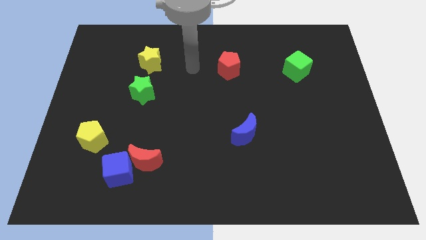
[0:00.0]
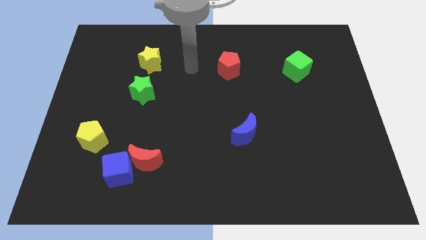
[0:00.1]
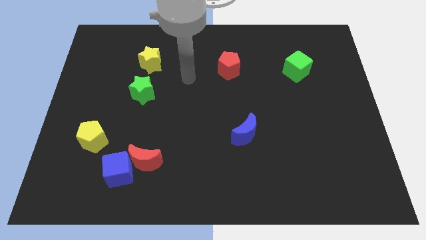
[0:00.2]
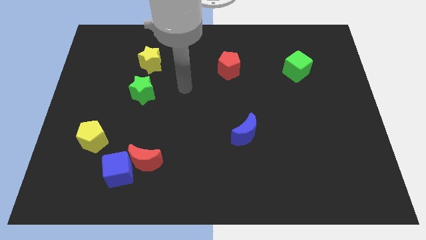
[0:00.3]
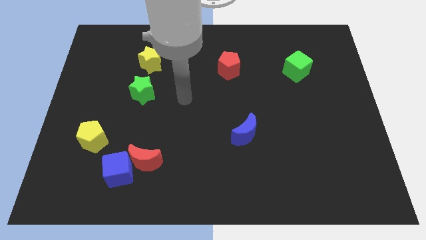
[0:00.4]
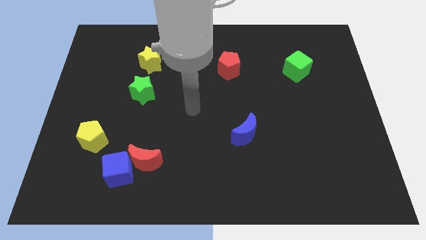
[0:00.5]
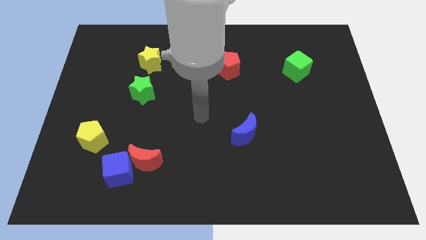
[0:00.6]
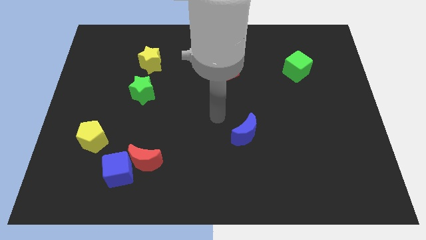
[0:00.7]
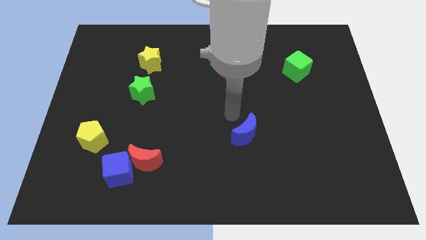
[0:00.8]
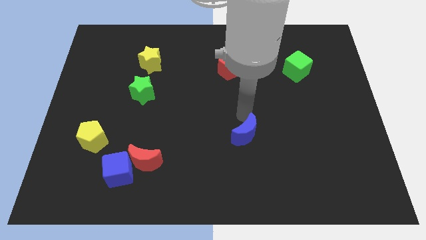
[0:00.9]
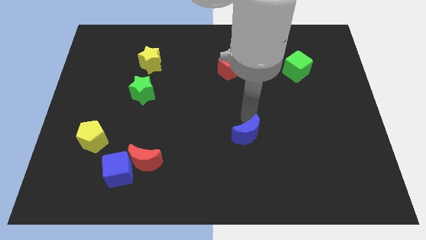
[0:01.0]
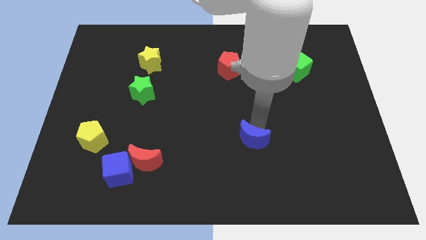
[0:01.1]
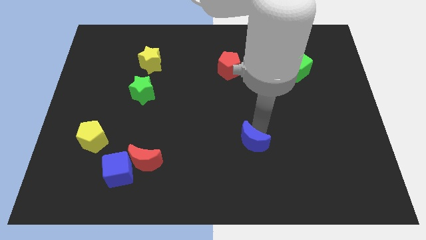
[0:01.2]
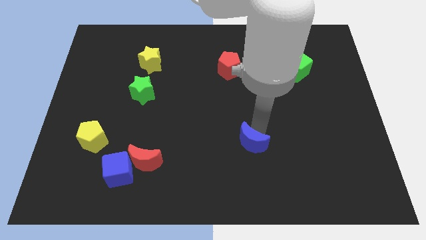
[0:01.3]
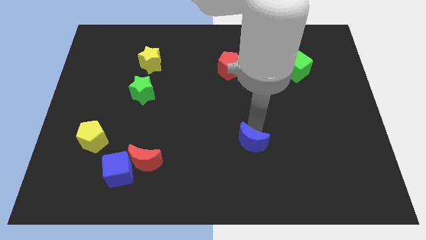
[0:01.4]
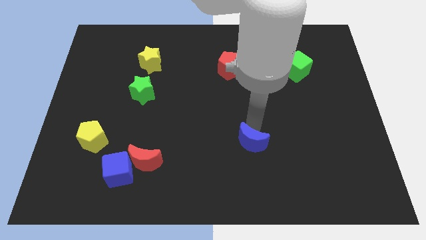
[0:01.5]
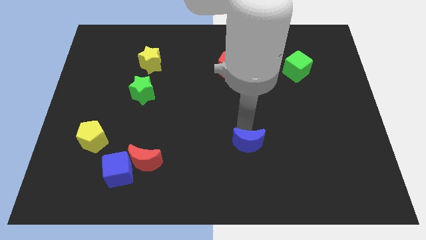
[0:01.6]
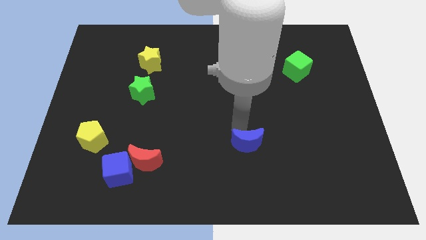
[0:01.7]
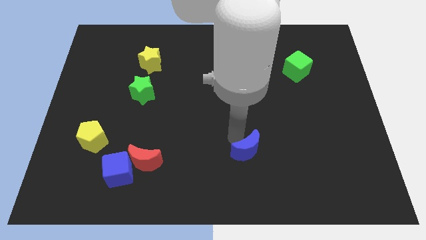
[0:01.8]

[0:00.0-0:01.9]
push the blue crescent slightly to the bottom side of the board

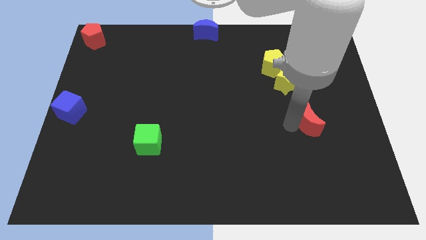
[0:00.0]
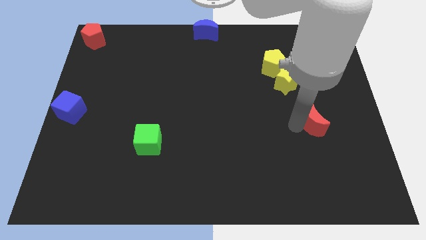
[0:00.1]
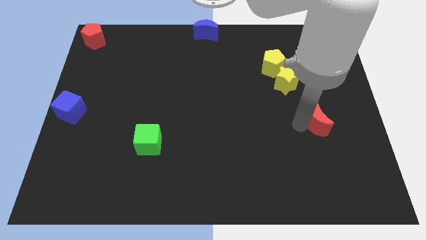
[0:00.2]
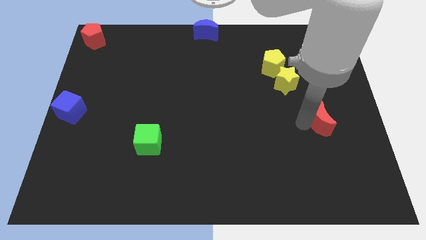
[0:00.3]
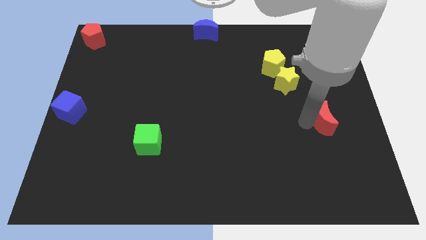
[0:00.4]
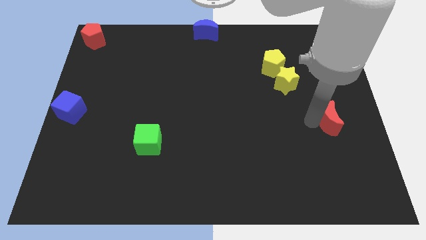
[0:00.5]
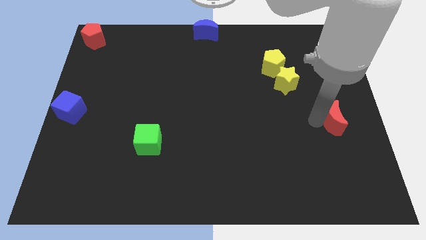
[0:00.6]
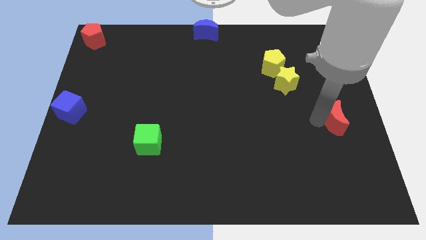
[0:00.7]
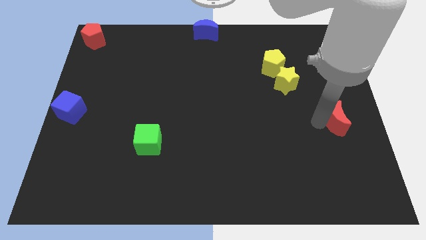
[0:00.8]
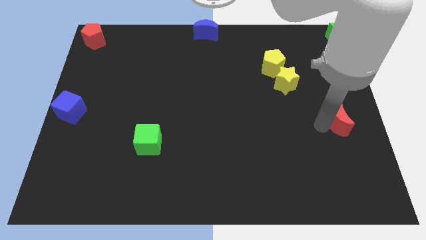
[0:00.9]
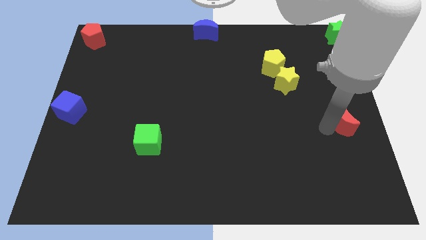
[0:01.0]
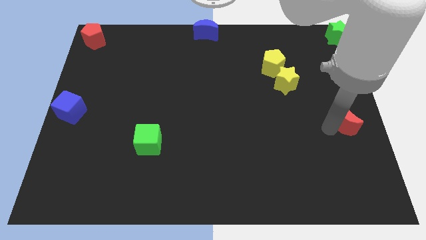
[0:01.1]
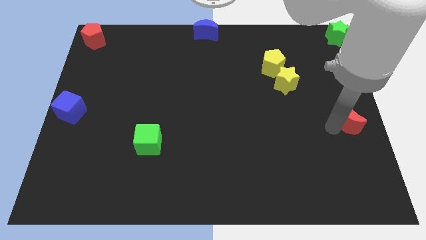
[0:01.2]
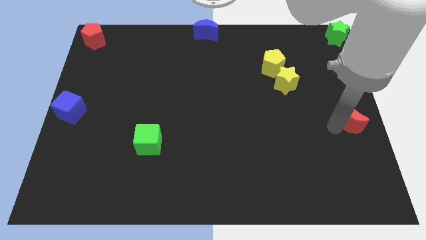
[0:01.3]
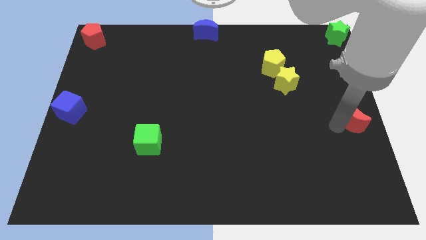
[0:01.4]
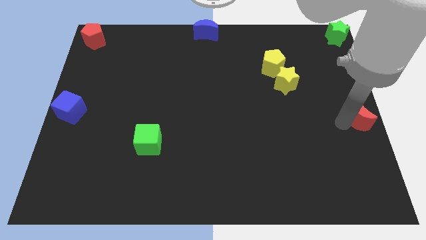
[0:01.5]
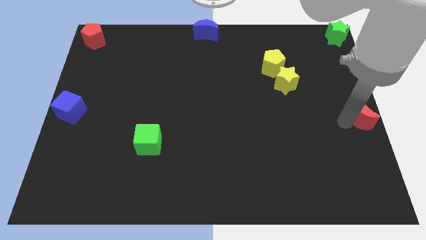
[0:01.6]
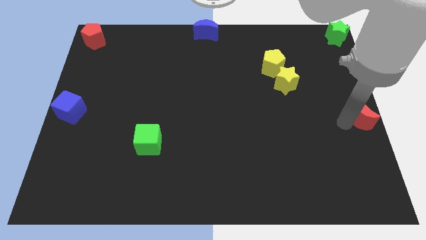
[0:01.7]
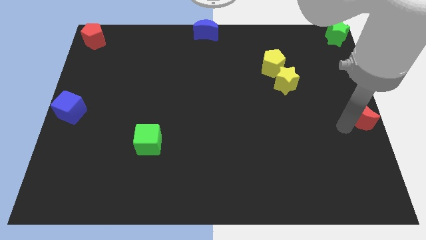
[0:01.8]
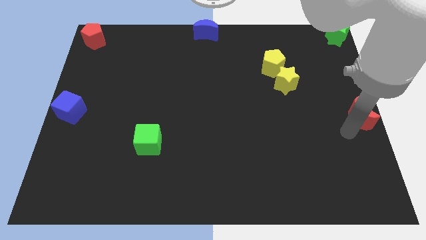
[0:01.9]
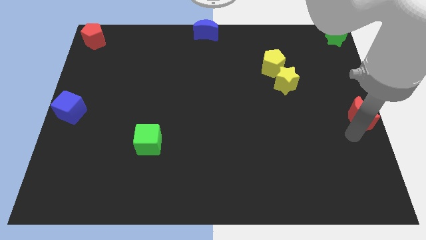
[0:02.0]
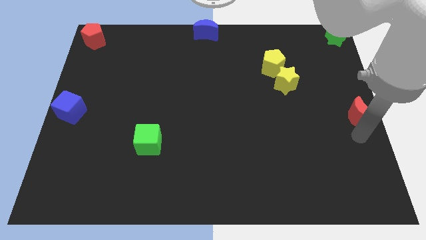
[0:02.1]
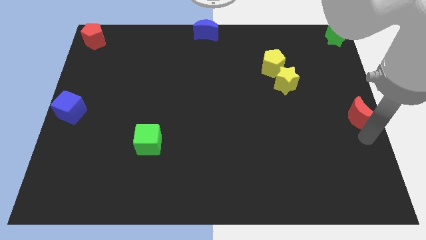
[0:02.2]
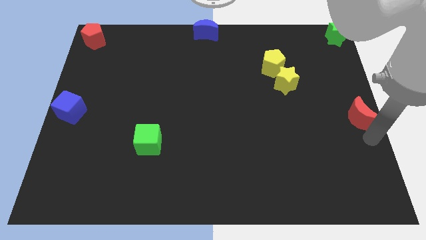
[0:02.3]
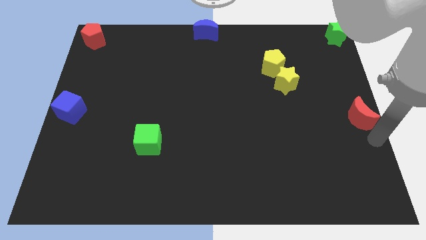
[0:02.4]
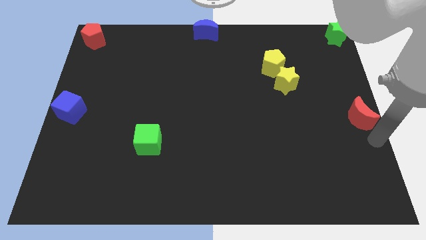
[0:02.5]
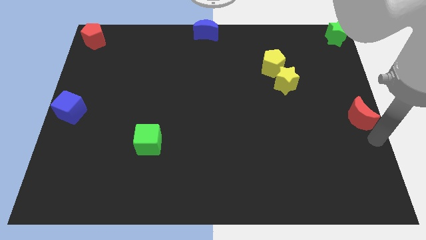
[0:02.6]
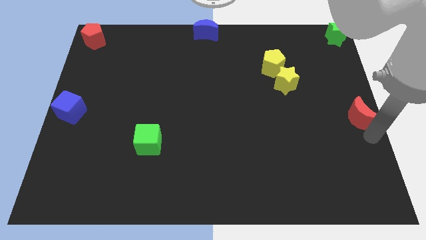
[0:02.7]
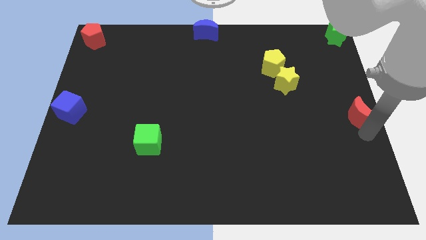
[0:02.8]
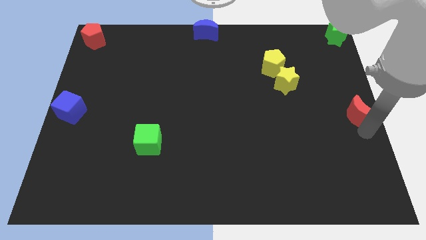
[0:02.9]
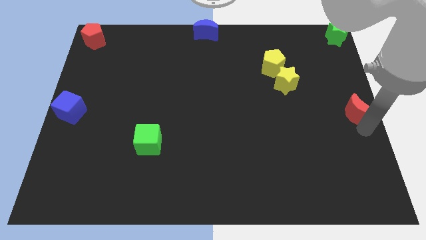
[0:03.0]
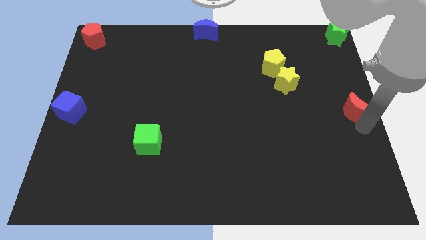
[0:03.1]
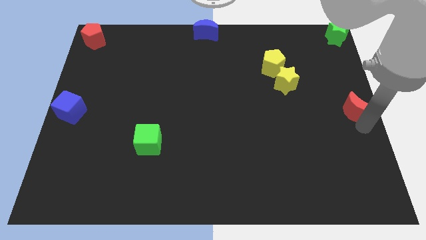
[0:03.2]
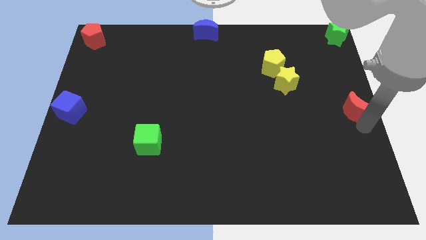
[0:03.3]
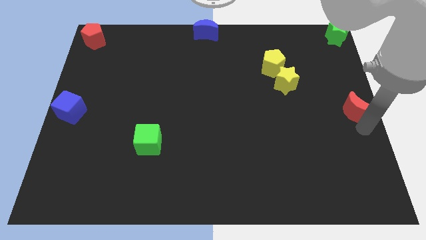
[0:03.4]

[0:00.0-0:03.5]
push the red moon towards right center of the board

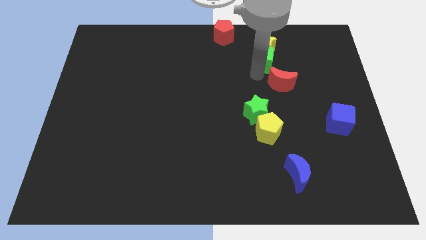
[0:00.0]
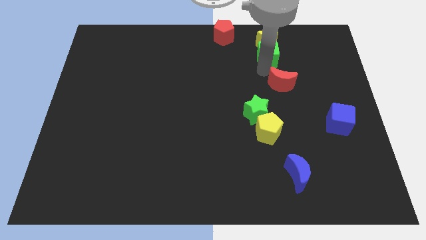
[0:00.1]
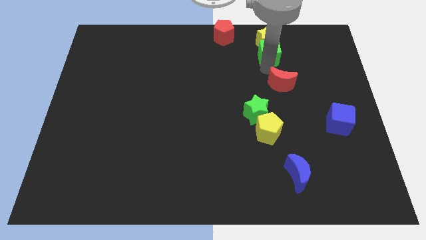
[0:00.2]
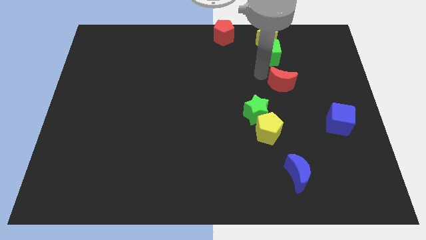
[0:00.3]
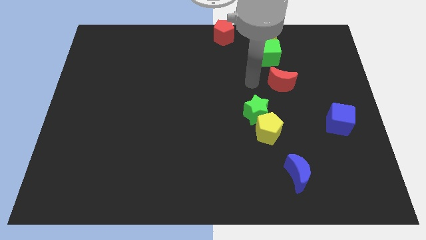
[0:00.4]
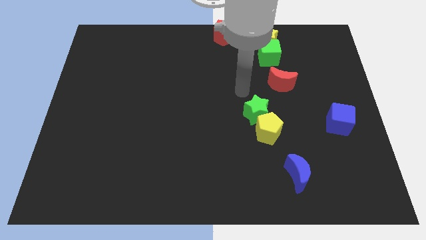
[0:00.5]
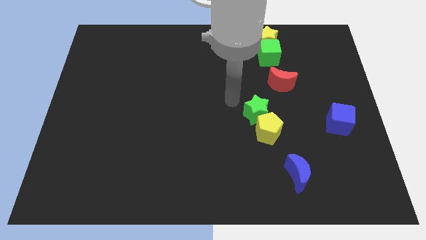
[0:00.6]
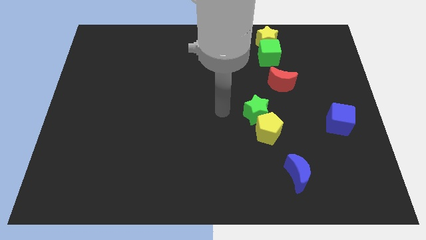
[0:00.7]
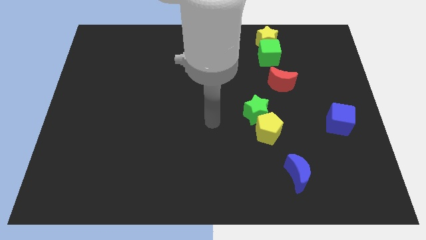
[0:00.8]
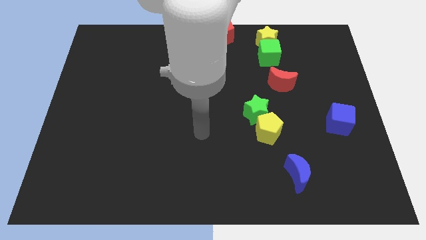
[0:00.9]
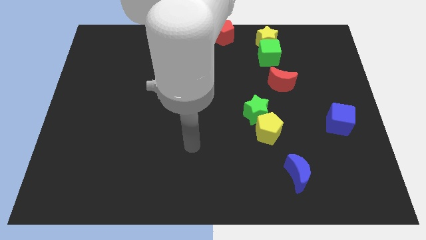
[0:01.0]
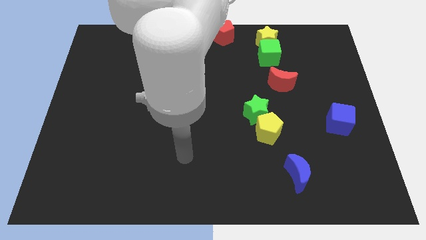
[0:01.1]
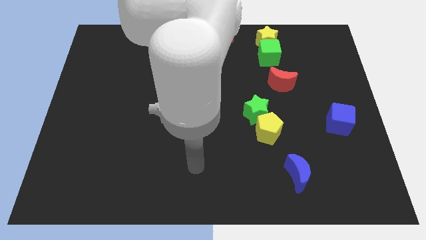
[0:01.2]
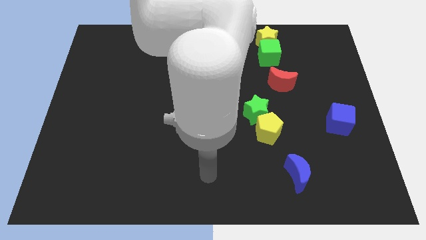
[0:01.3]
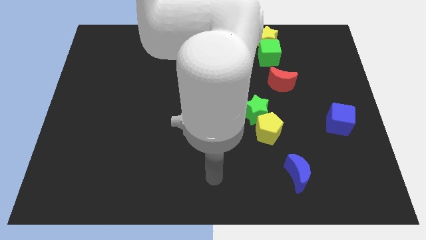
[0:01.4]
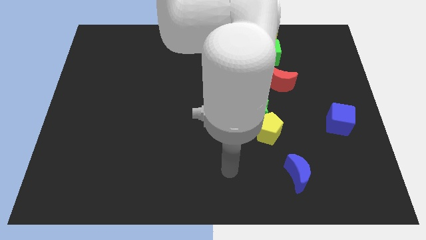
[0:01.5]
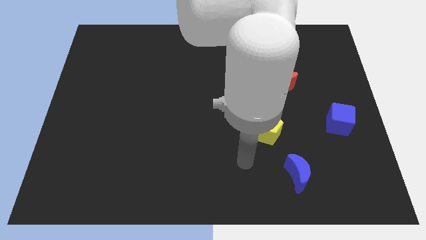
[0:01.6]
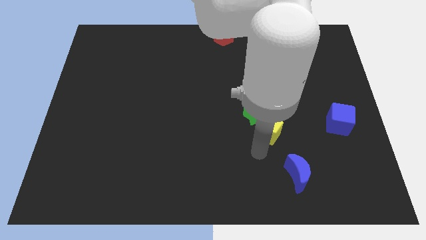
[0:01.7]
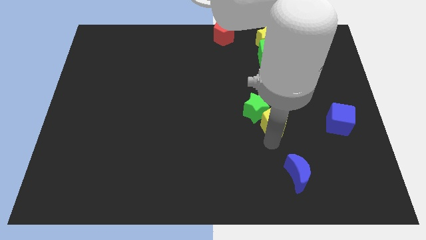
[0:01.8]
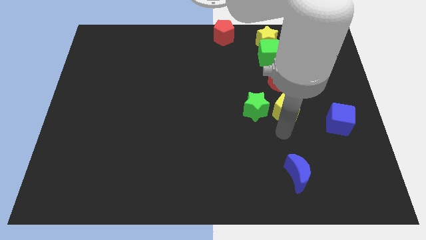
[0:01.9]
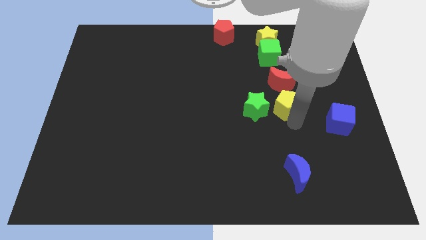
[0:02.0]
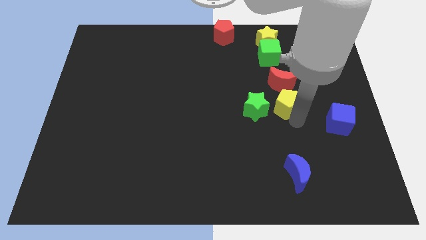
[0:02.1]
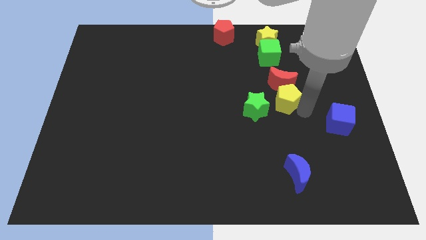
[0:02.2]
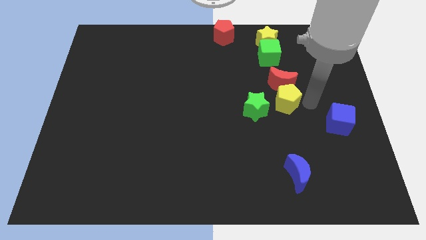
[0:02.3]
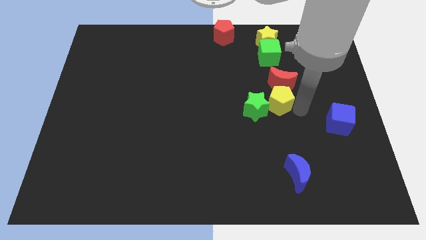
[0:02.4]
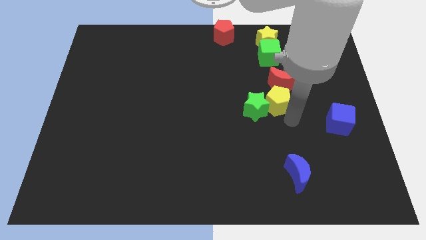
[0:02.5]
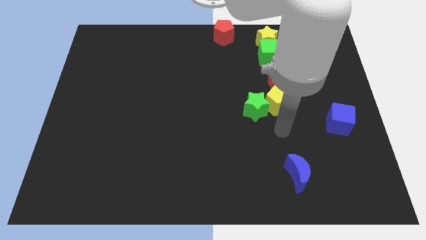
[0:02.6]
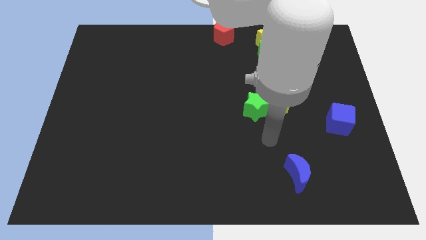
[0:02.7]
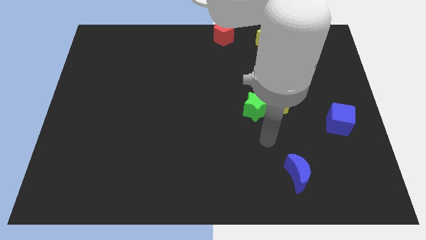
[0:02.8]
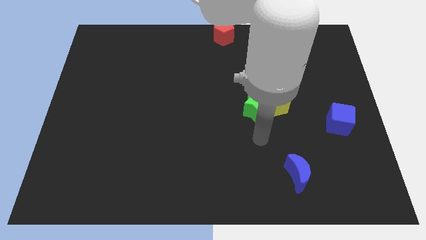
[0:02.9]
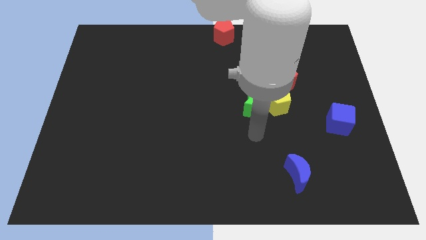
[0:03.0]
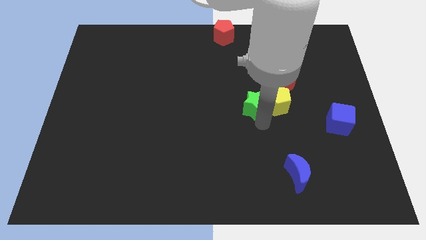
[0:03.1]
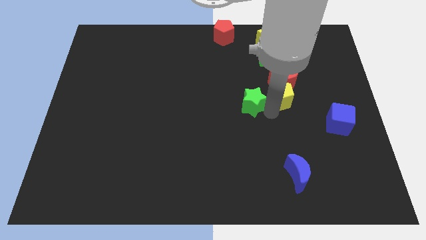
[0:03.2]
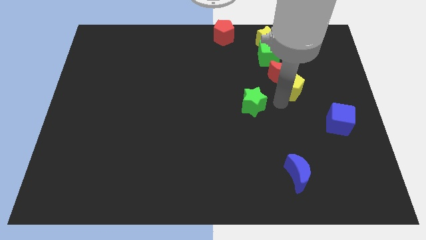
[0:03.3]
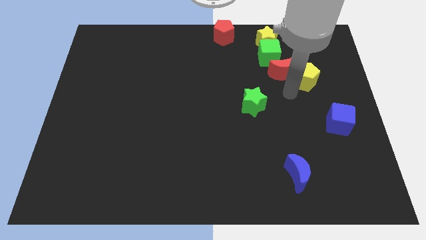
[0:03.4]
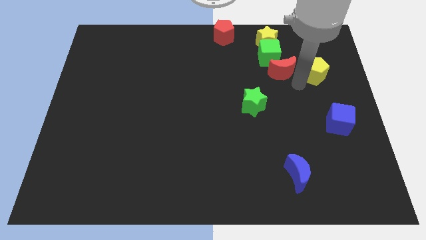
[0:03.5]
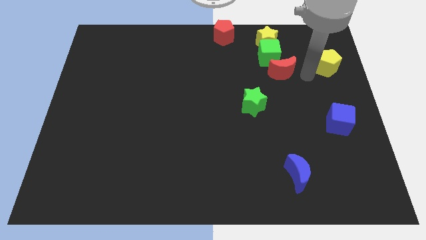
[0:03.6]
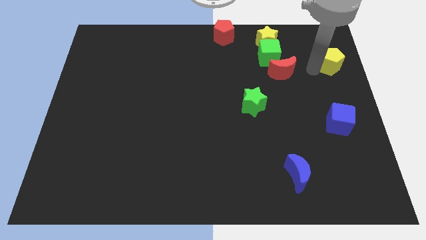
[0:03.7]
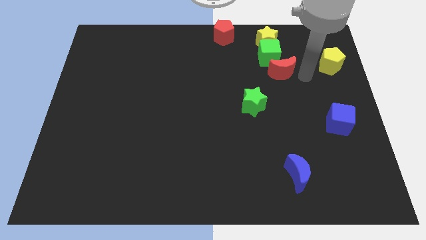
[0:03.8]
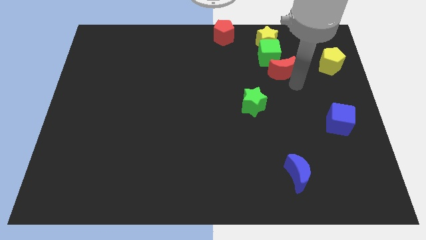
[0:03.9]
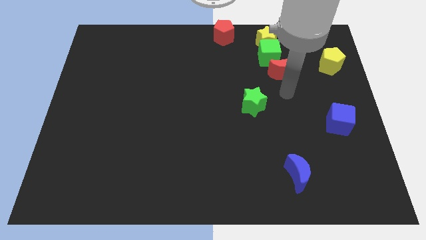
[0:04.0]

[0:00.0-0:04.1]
move the yellow pentagon to the right of the board
